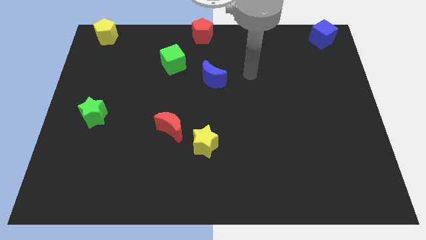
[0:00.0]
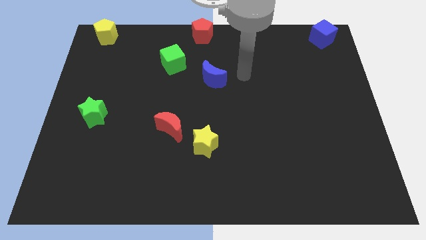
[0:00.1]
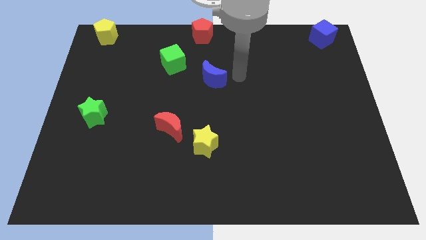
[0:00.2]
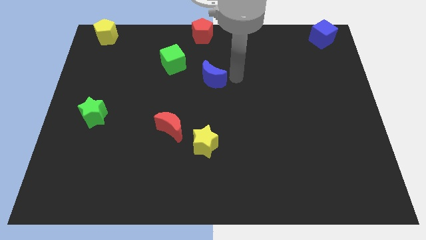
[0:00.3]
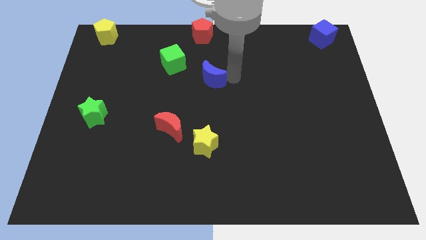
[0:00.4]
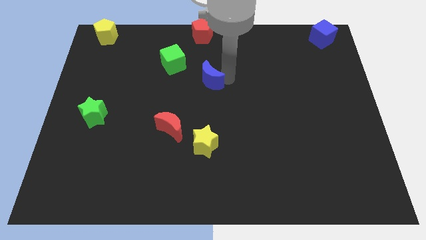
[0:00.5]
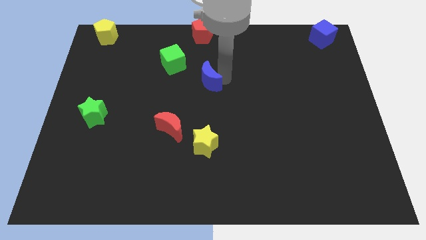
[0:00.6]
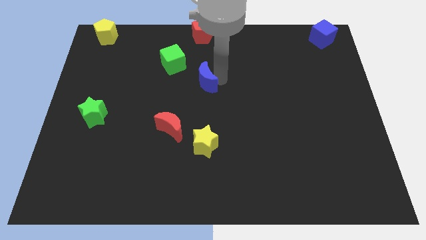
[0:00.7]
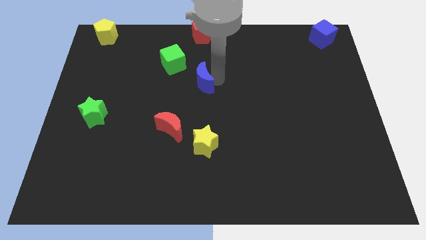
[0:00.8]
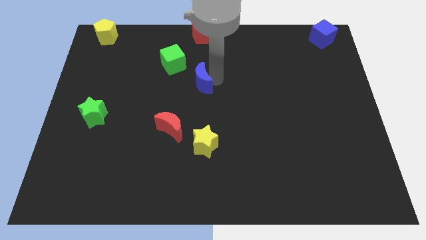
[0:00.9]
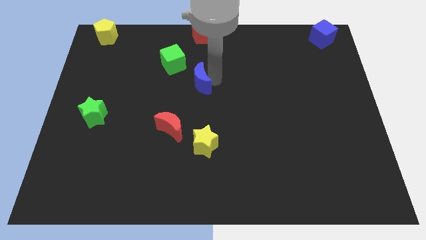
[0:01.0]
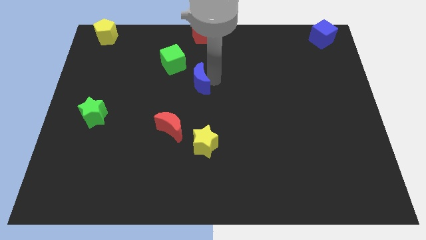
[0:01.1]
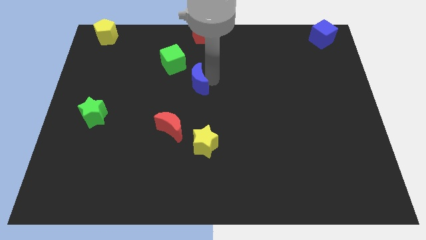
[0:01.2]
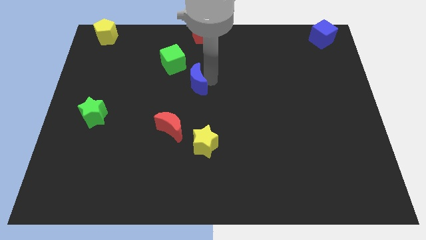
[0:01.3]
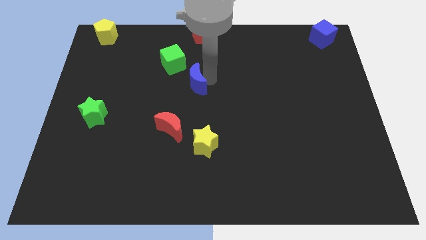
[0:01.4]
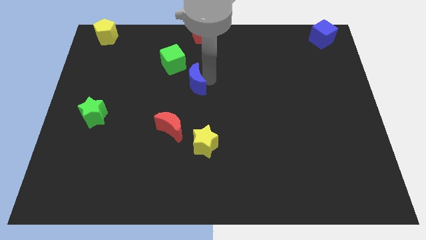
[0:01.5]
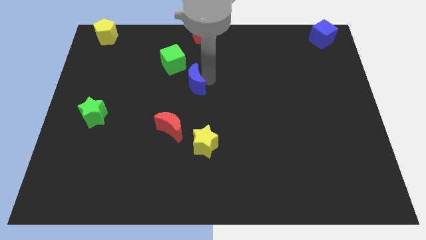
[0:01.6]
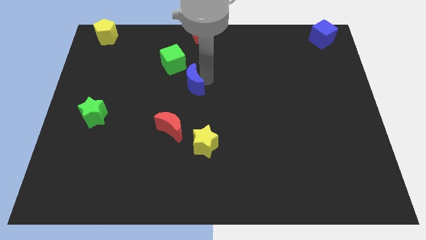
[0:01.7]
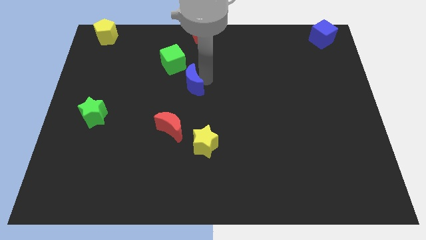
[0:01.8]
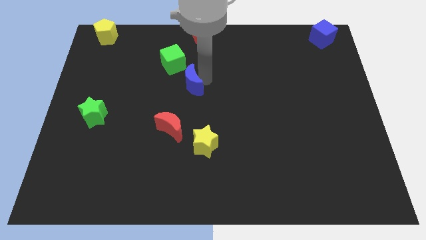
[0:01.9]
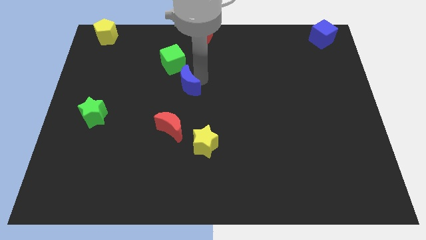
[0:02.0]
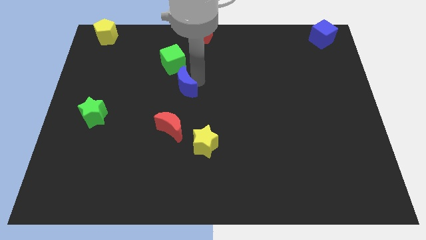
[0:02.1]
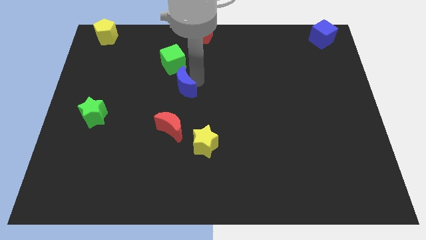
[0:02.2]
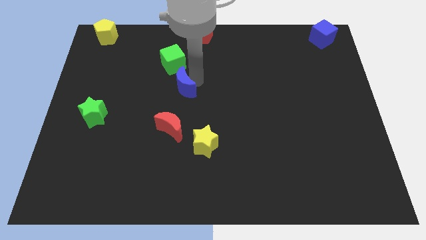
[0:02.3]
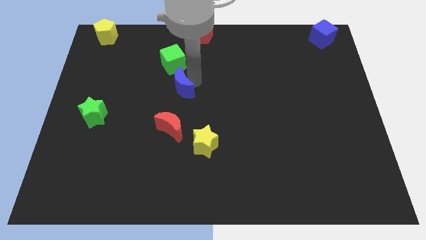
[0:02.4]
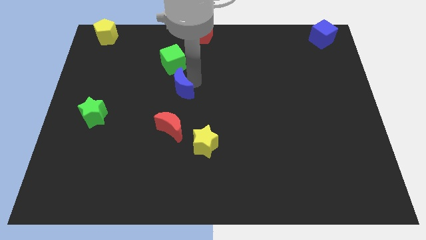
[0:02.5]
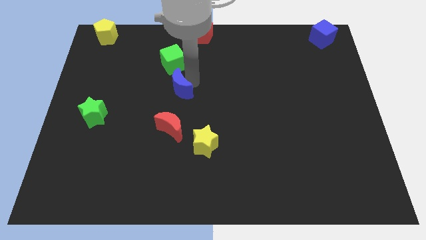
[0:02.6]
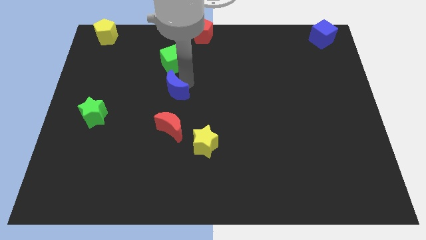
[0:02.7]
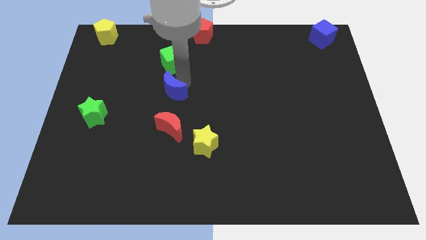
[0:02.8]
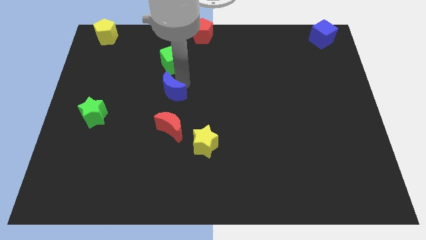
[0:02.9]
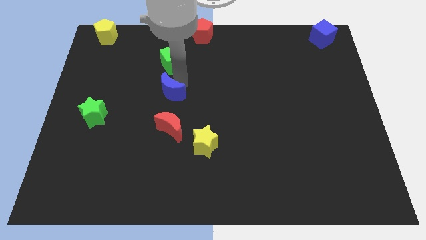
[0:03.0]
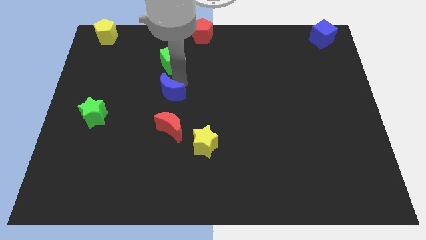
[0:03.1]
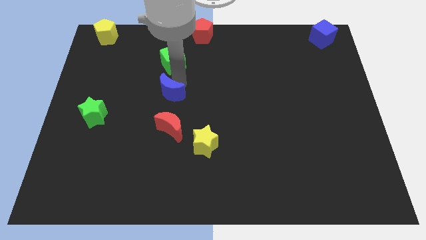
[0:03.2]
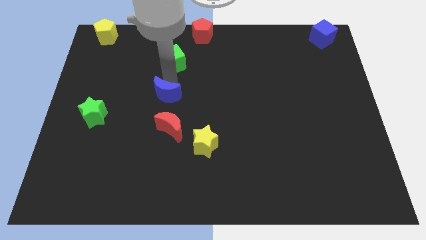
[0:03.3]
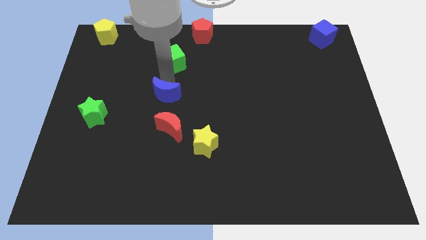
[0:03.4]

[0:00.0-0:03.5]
move the blue crescent to the bottom side of the green cube

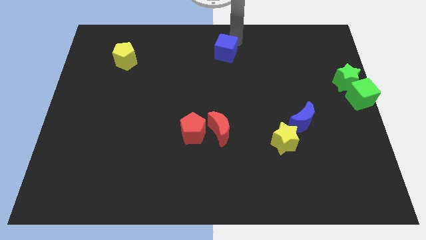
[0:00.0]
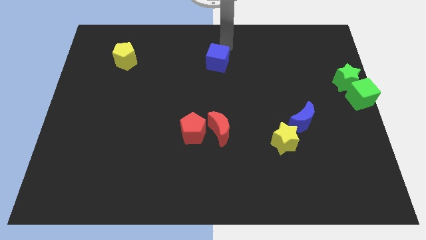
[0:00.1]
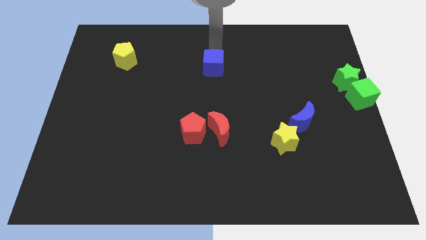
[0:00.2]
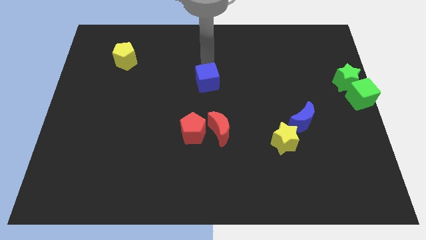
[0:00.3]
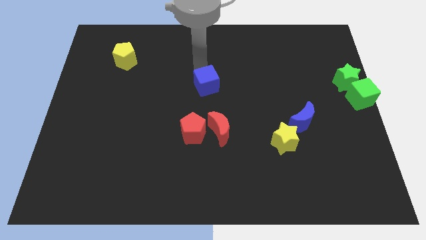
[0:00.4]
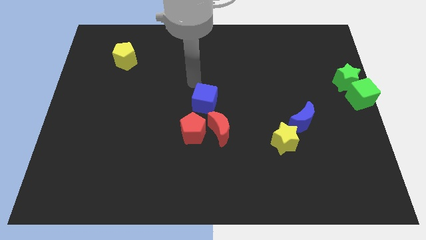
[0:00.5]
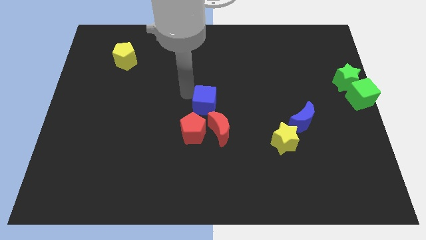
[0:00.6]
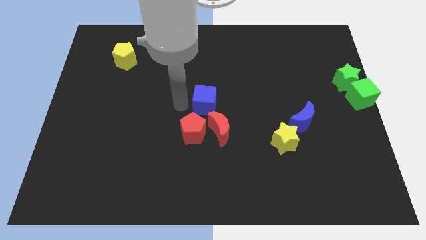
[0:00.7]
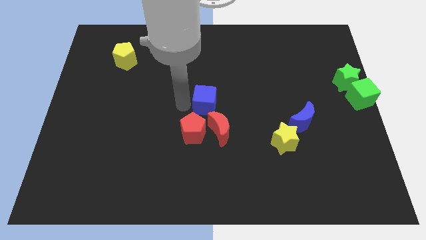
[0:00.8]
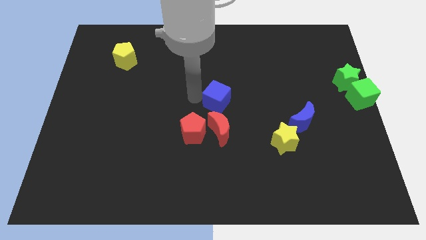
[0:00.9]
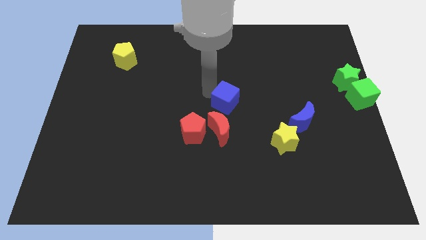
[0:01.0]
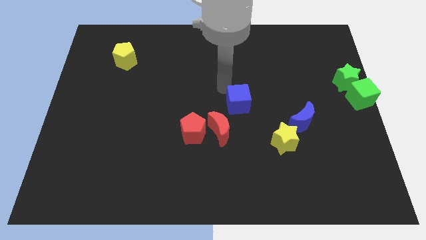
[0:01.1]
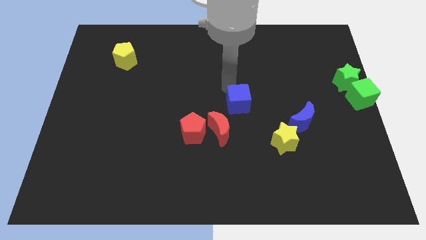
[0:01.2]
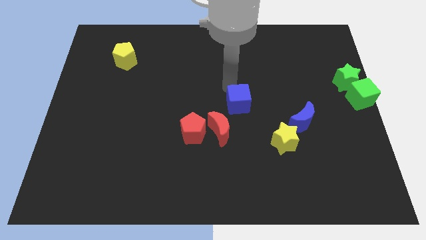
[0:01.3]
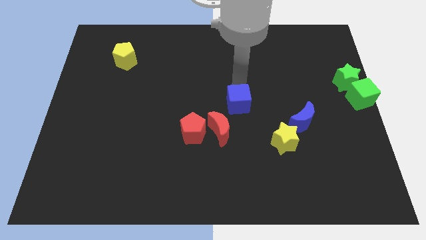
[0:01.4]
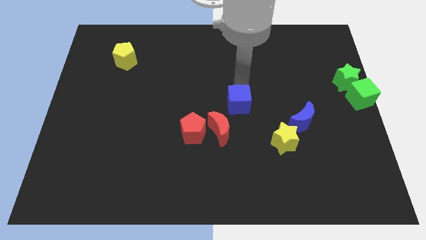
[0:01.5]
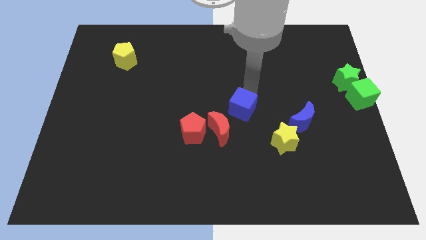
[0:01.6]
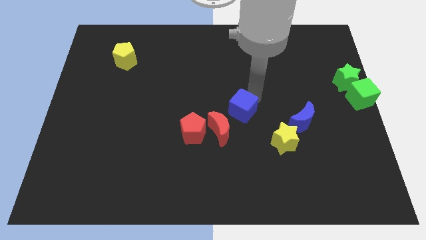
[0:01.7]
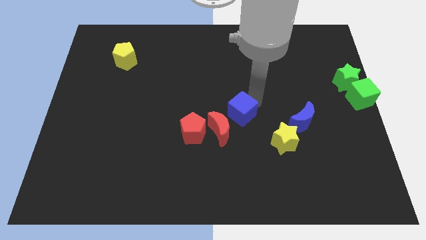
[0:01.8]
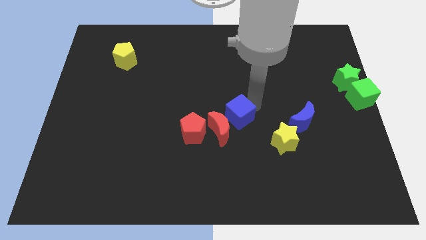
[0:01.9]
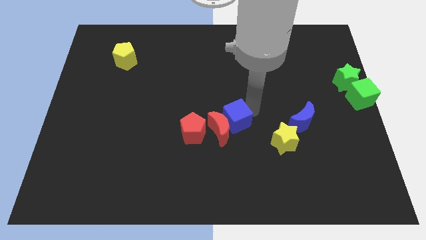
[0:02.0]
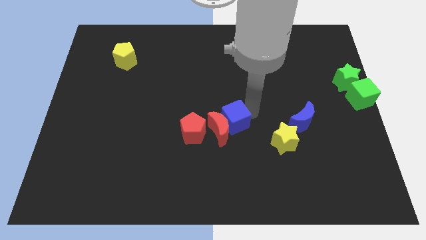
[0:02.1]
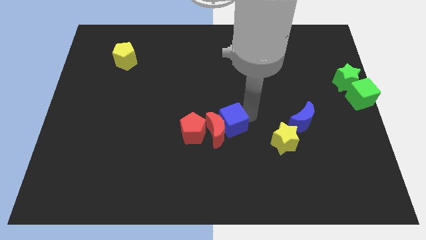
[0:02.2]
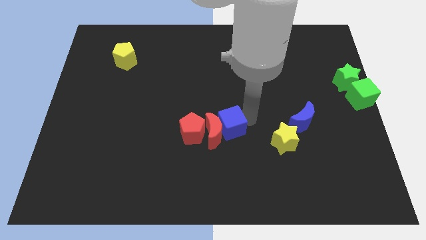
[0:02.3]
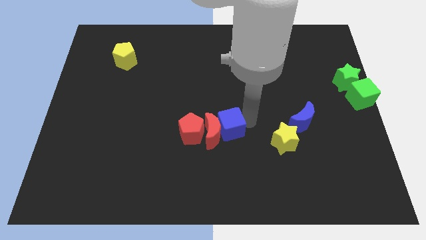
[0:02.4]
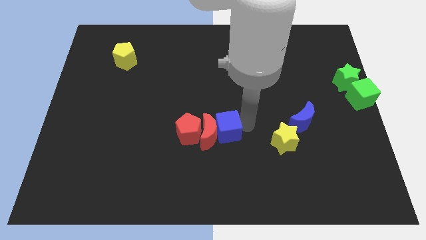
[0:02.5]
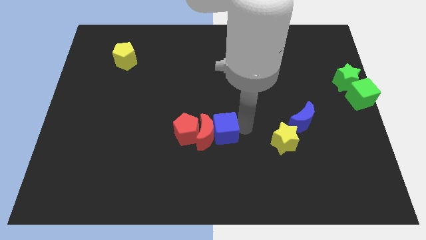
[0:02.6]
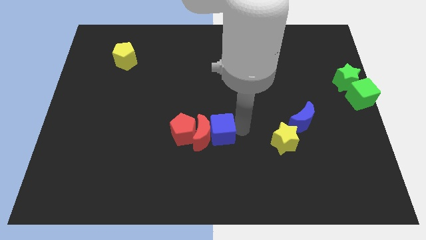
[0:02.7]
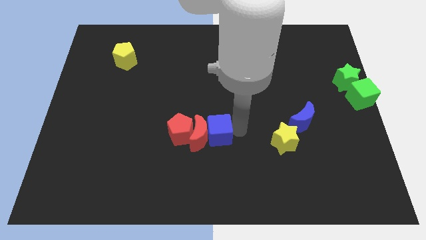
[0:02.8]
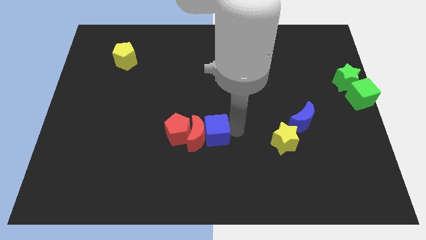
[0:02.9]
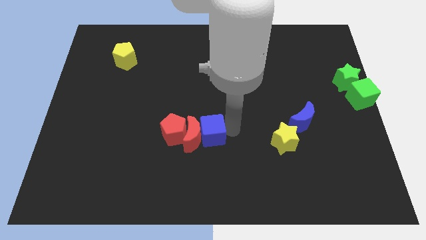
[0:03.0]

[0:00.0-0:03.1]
move the blue cube into the red crescent

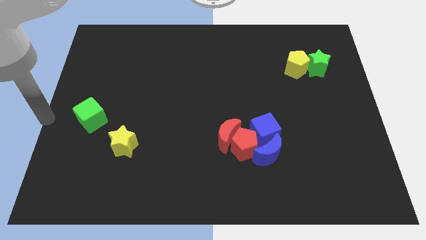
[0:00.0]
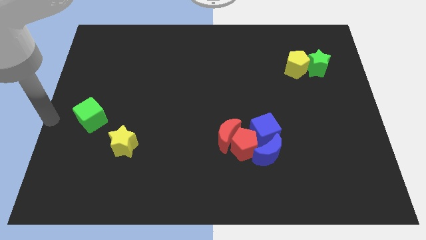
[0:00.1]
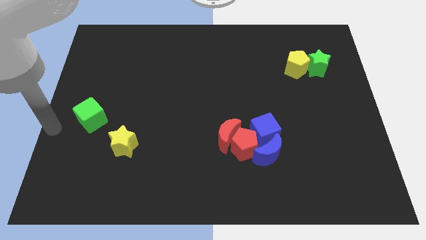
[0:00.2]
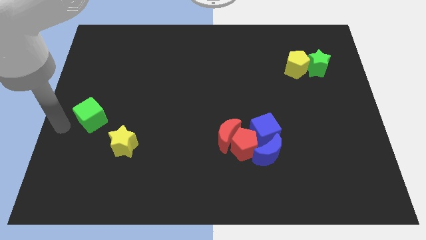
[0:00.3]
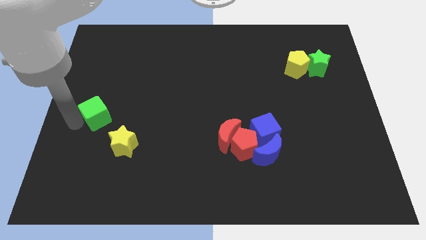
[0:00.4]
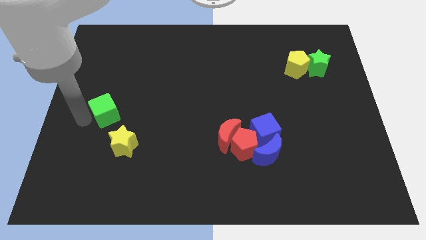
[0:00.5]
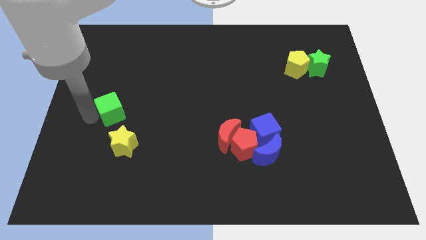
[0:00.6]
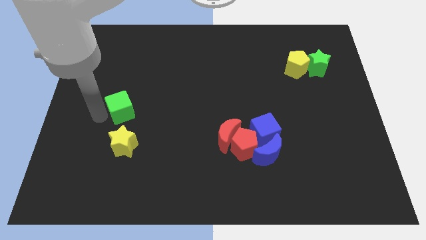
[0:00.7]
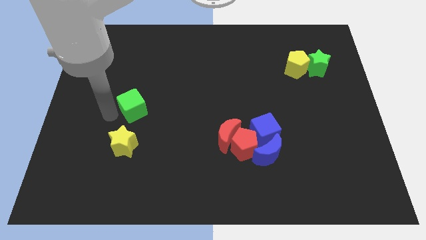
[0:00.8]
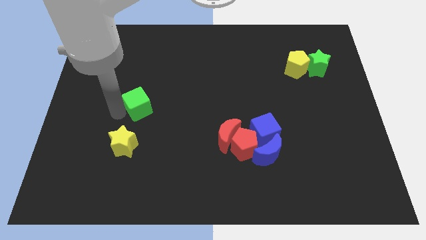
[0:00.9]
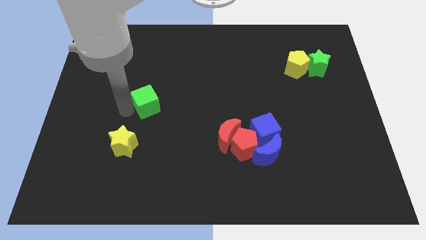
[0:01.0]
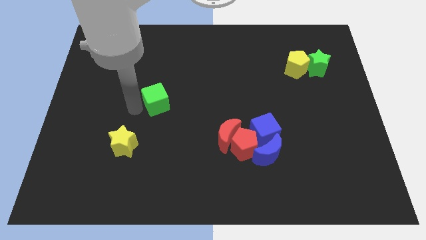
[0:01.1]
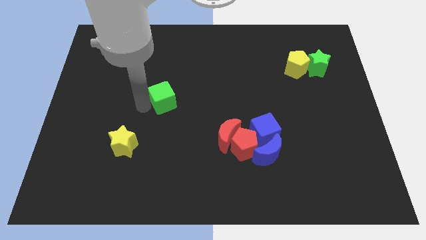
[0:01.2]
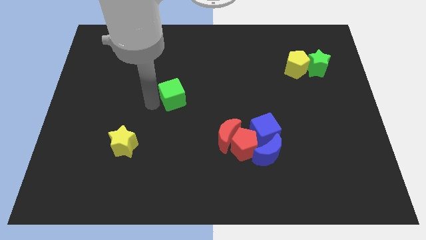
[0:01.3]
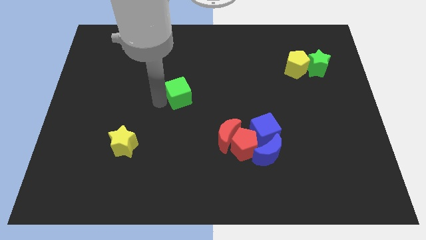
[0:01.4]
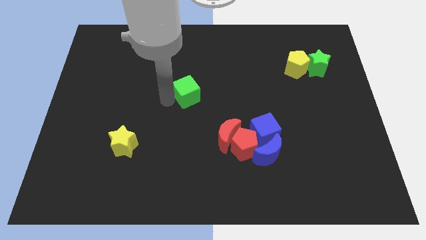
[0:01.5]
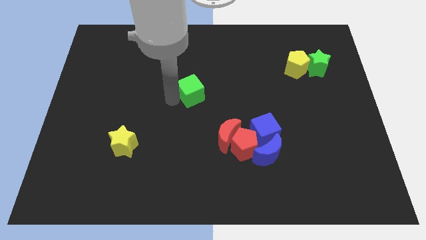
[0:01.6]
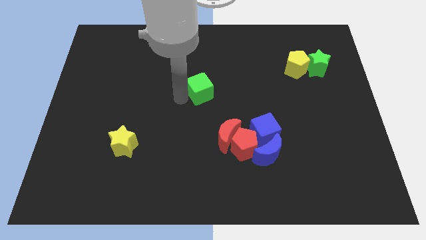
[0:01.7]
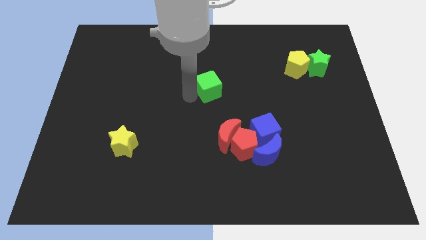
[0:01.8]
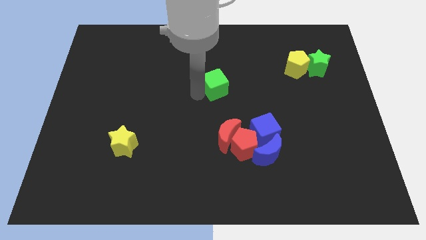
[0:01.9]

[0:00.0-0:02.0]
move the green cube above the red blocks

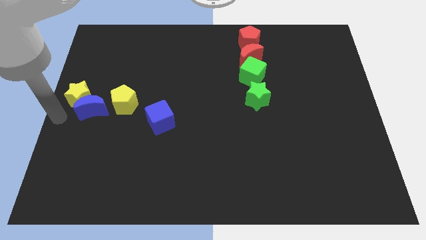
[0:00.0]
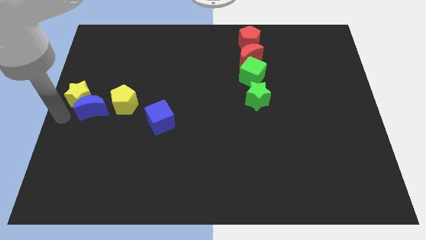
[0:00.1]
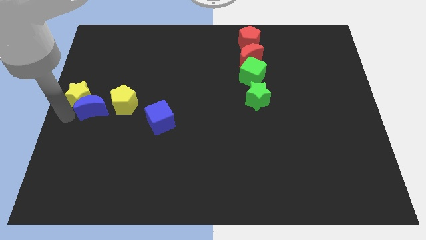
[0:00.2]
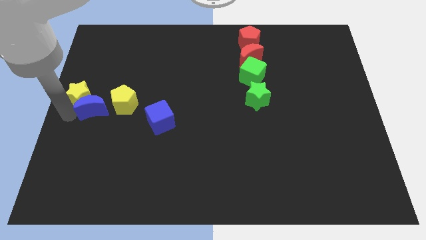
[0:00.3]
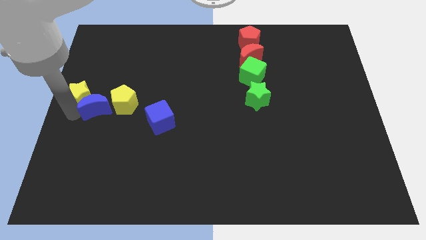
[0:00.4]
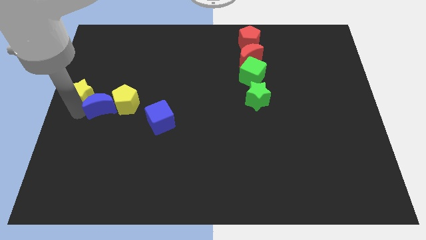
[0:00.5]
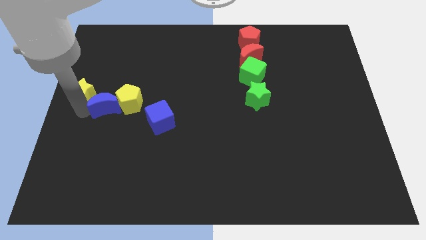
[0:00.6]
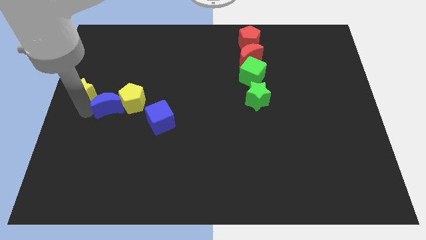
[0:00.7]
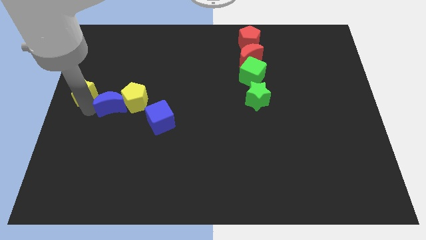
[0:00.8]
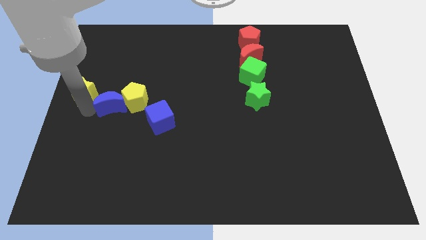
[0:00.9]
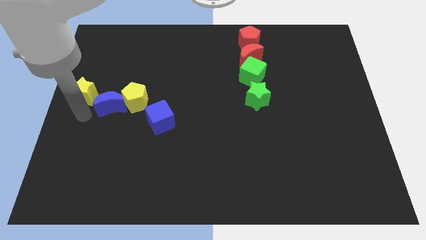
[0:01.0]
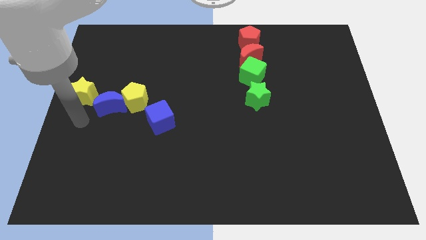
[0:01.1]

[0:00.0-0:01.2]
adjust the blue moon in between two yellow blocks
